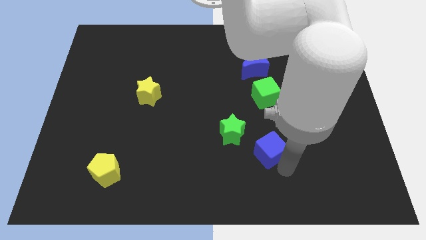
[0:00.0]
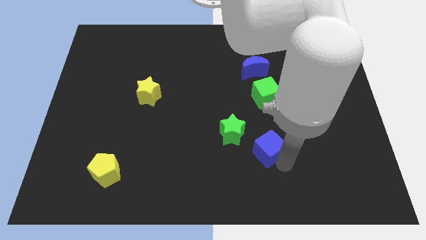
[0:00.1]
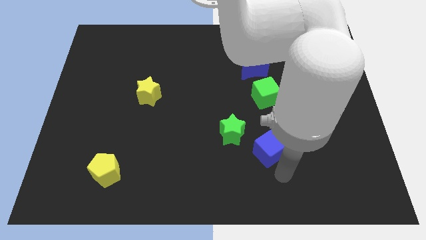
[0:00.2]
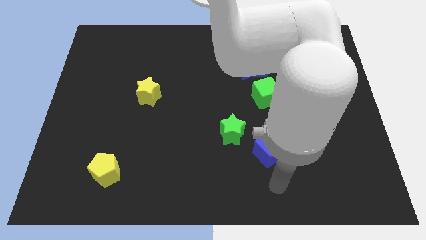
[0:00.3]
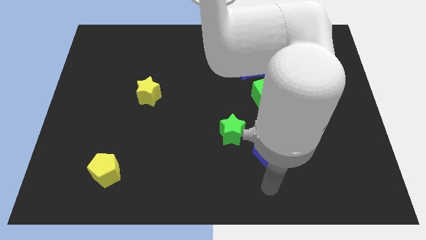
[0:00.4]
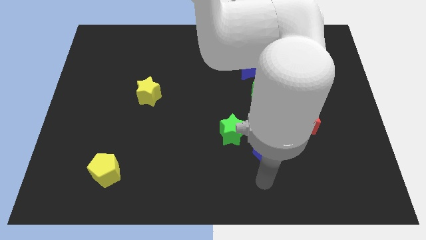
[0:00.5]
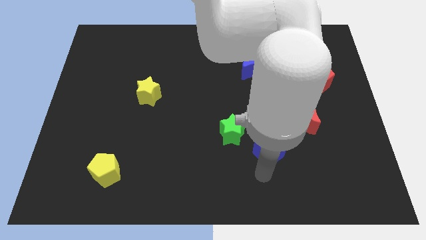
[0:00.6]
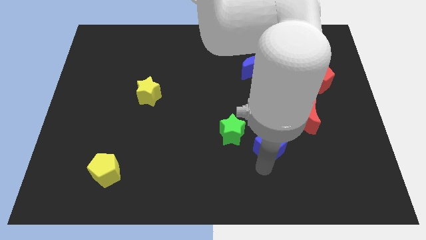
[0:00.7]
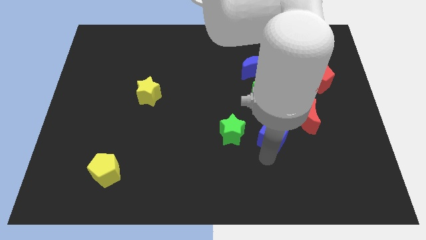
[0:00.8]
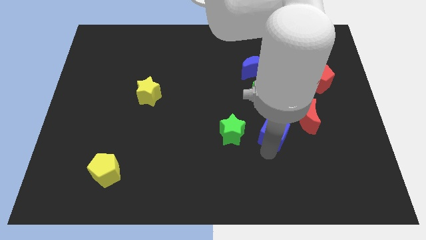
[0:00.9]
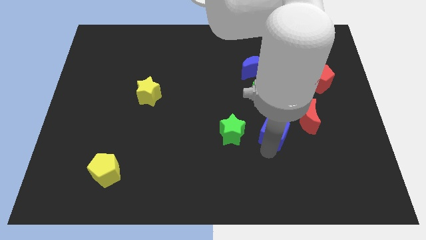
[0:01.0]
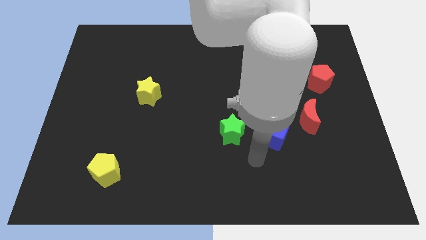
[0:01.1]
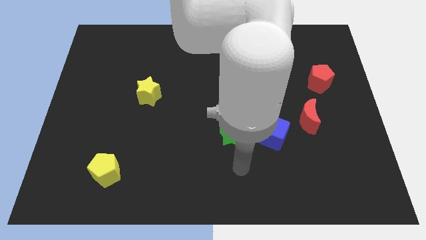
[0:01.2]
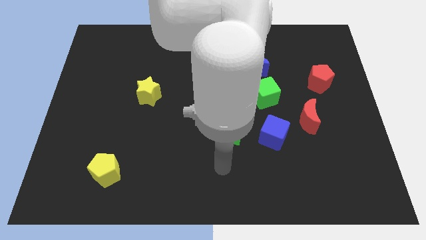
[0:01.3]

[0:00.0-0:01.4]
place the blue cube to the right side of the green star

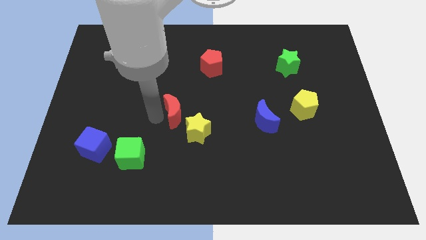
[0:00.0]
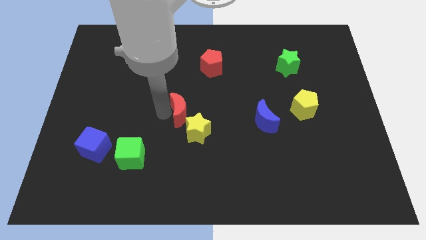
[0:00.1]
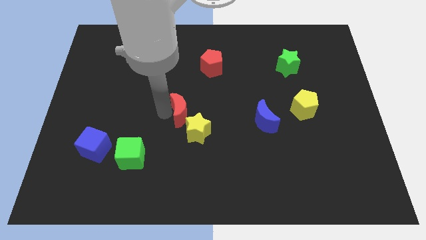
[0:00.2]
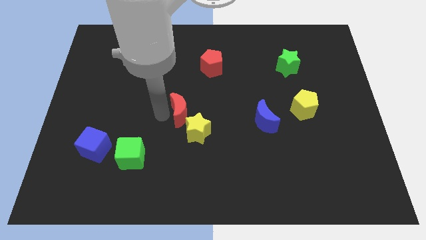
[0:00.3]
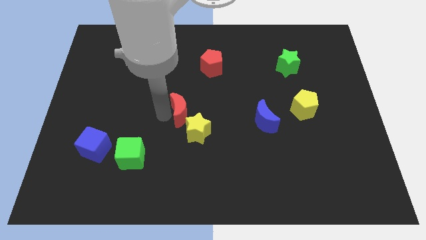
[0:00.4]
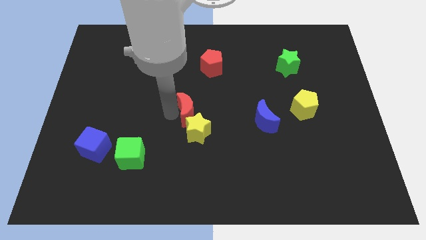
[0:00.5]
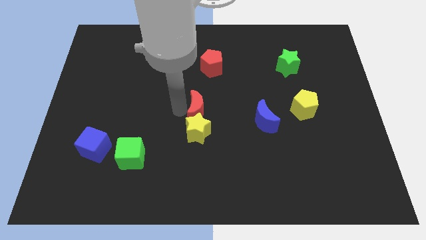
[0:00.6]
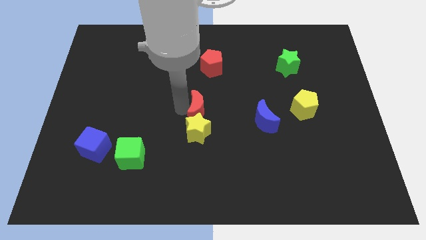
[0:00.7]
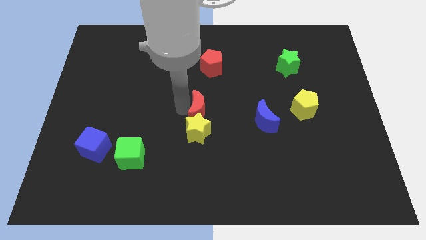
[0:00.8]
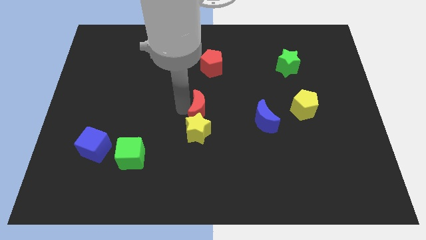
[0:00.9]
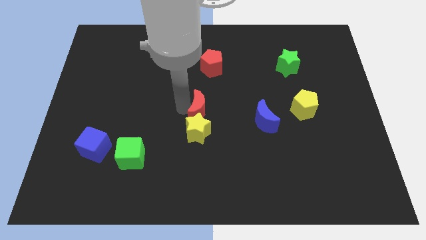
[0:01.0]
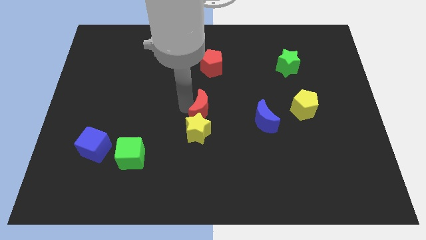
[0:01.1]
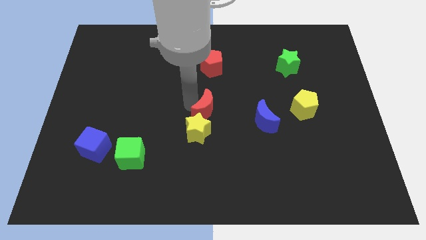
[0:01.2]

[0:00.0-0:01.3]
put the red crescent at the top of the yellow star

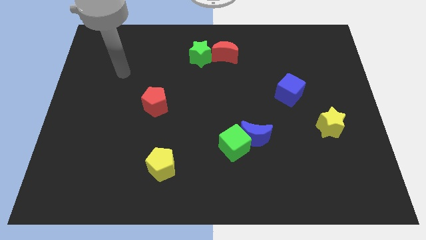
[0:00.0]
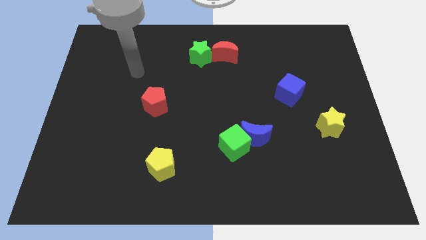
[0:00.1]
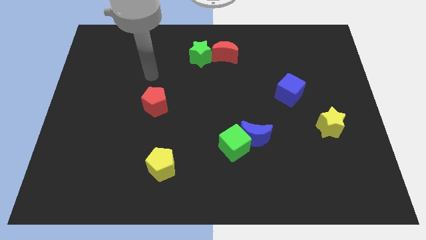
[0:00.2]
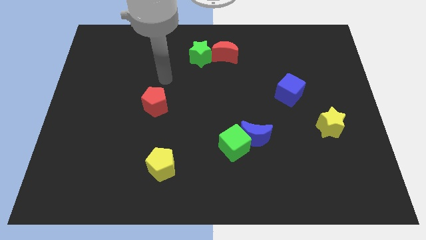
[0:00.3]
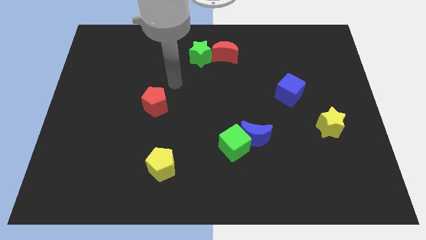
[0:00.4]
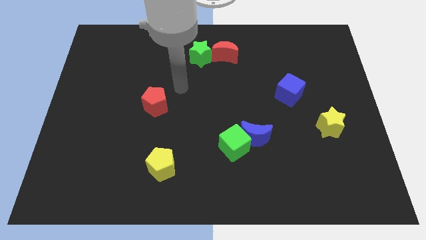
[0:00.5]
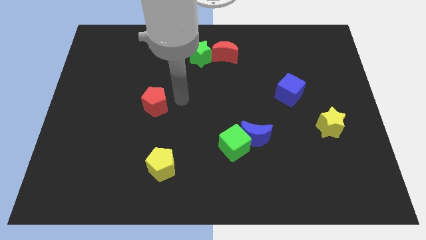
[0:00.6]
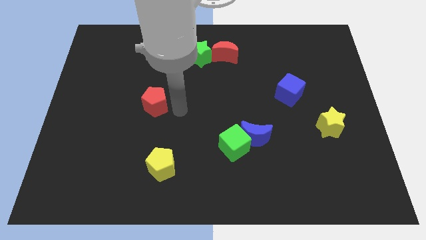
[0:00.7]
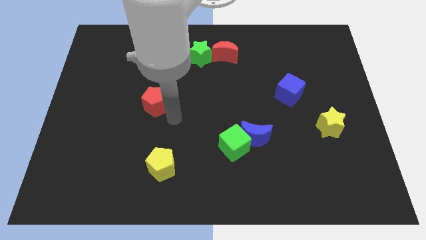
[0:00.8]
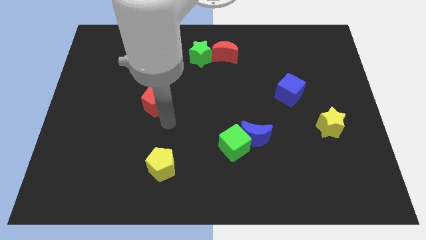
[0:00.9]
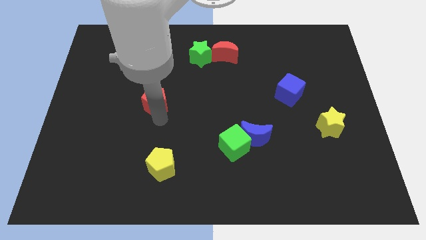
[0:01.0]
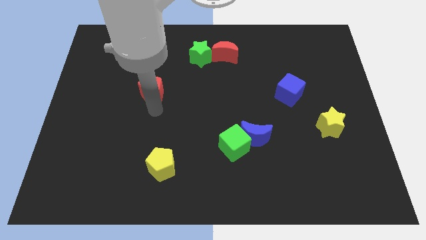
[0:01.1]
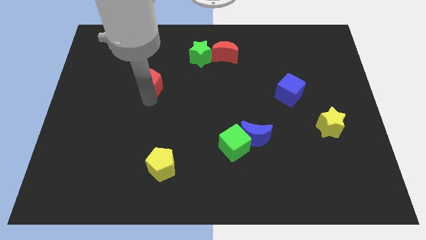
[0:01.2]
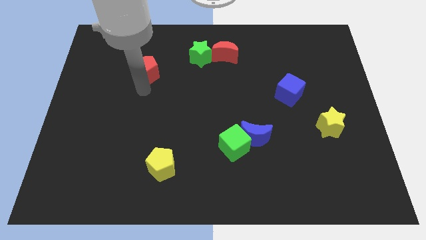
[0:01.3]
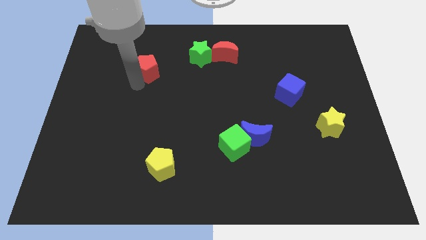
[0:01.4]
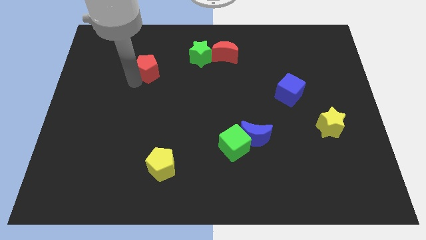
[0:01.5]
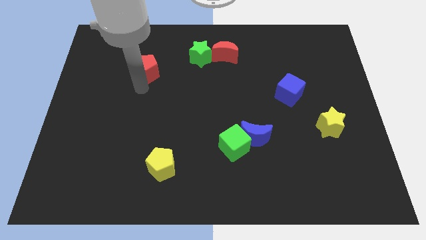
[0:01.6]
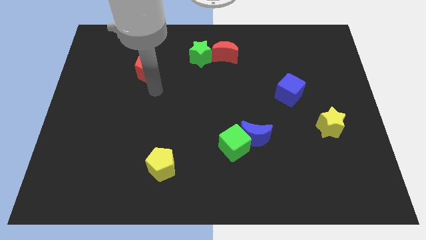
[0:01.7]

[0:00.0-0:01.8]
push the red pentagon diagonal to the green star

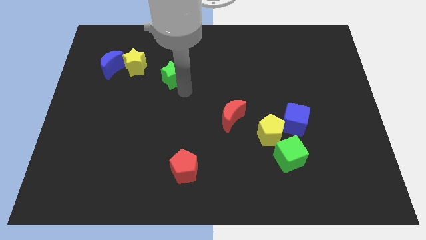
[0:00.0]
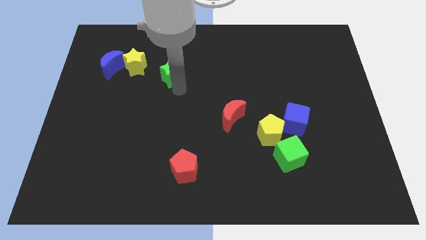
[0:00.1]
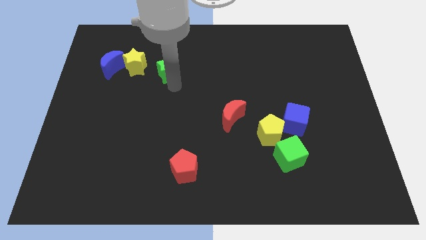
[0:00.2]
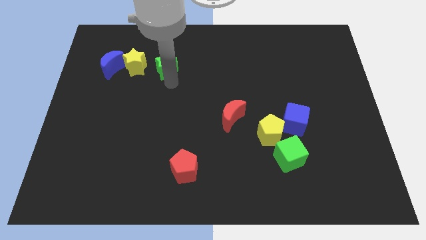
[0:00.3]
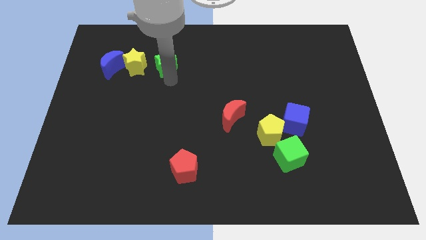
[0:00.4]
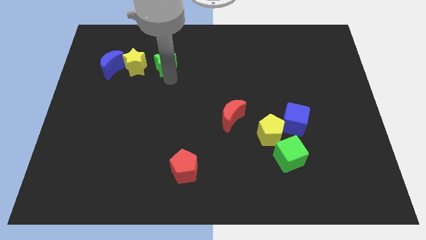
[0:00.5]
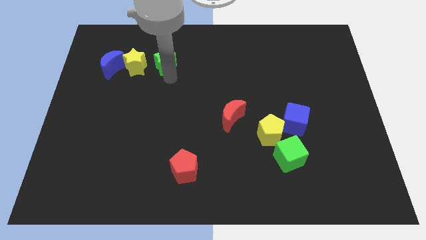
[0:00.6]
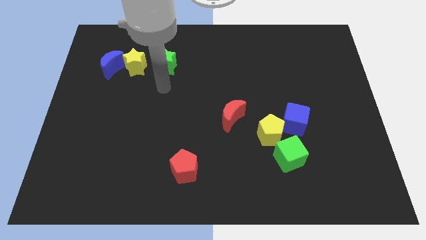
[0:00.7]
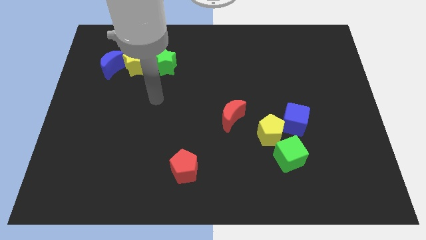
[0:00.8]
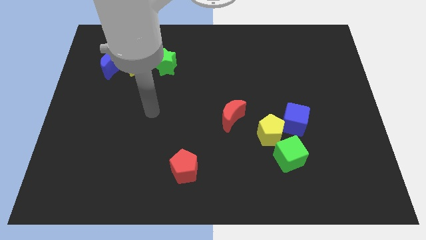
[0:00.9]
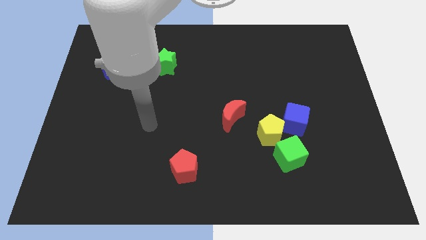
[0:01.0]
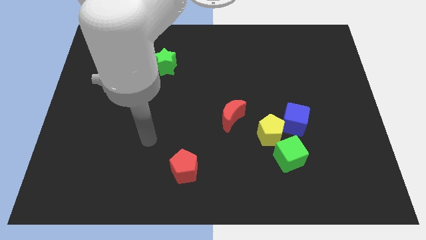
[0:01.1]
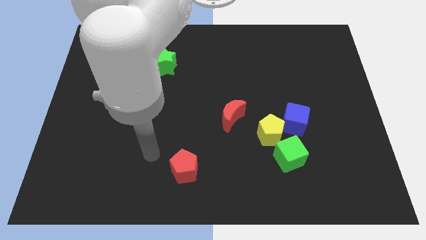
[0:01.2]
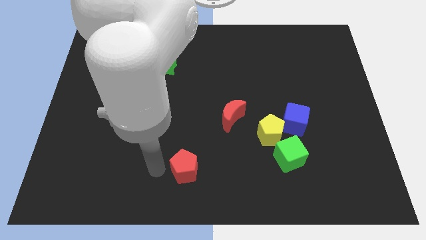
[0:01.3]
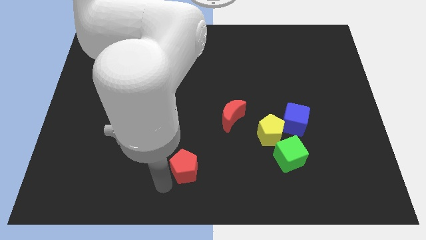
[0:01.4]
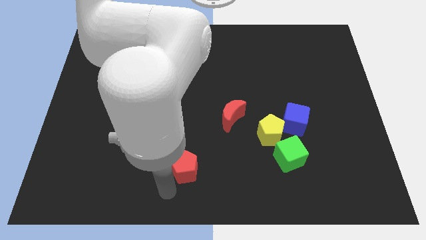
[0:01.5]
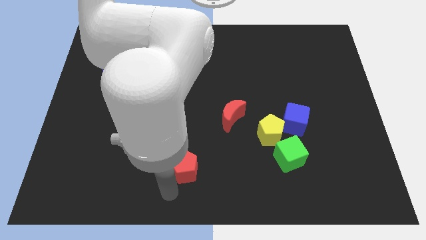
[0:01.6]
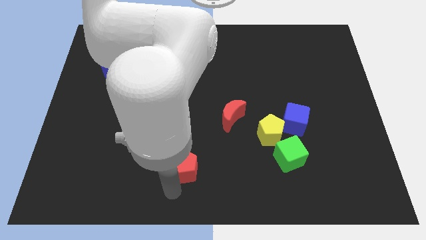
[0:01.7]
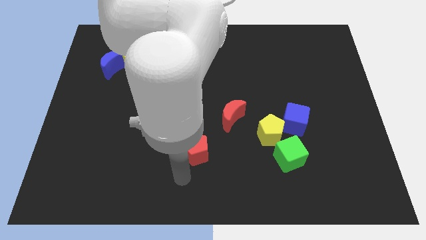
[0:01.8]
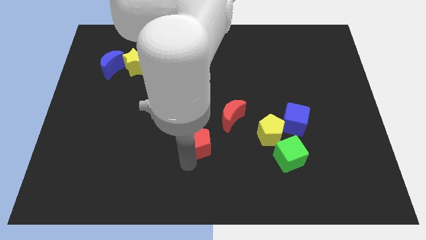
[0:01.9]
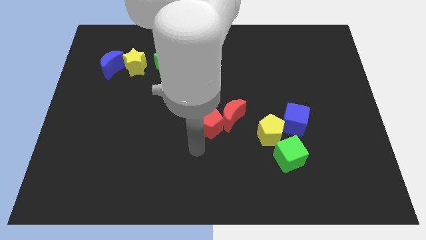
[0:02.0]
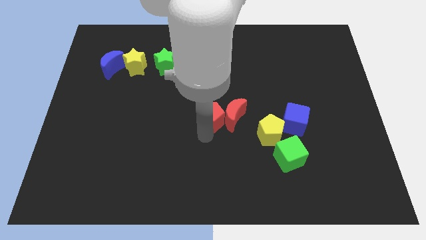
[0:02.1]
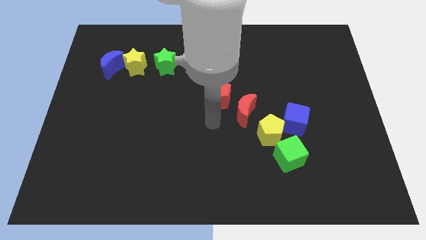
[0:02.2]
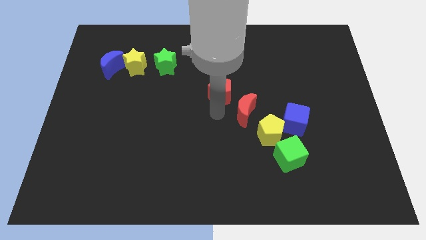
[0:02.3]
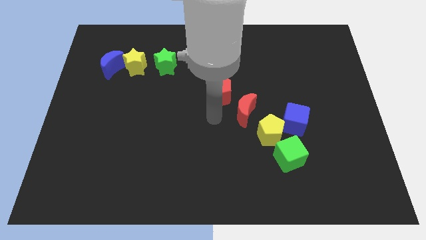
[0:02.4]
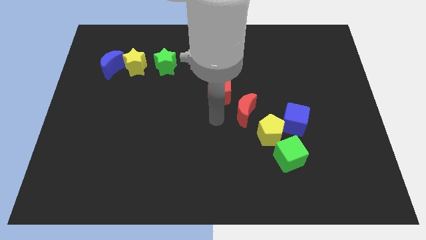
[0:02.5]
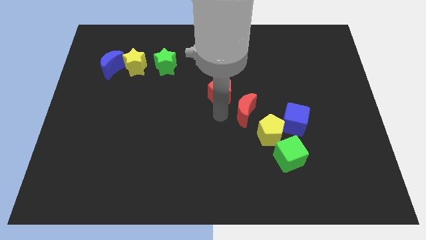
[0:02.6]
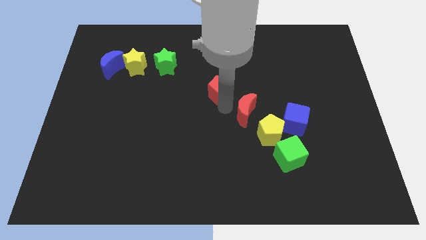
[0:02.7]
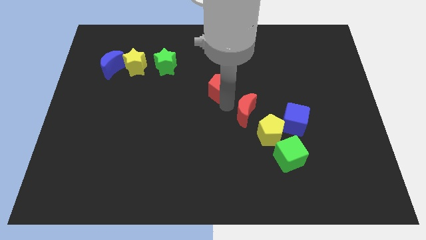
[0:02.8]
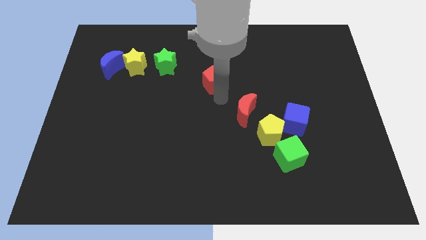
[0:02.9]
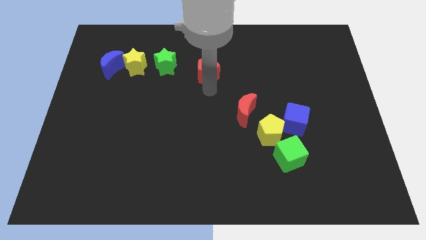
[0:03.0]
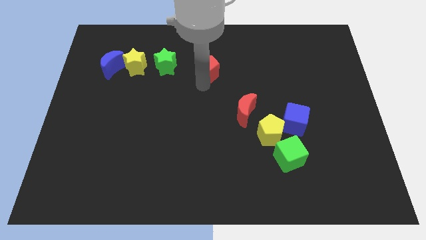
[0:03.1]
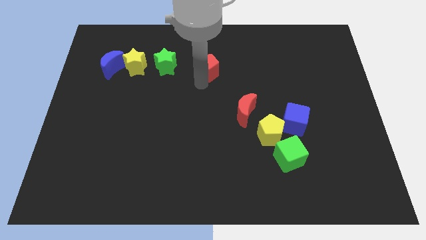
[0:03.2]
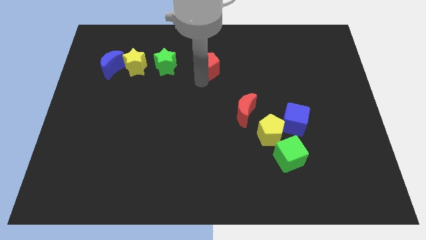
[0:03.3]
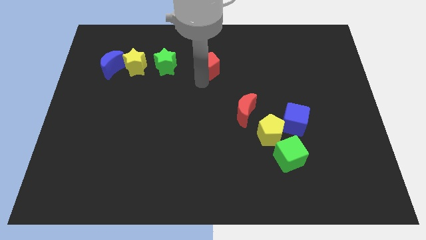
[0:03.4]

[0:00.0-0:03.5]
move red pentagon to the right of green star

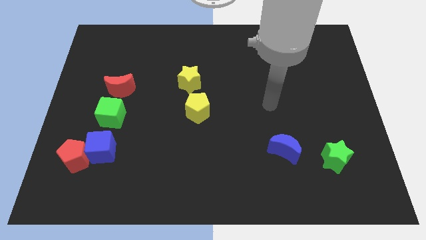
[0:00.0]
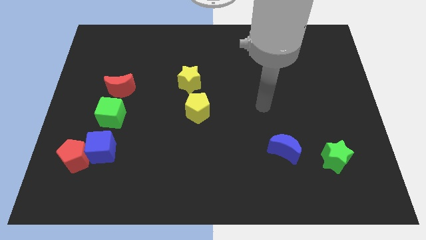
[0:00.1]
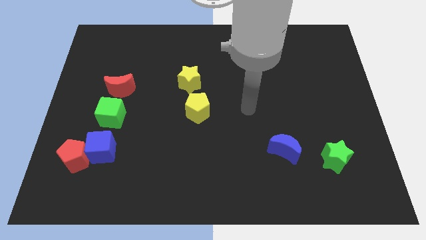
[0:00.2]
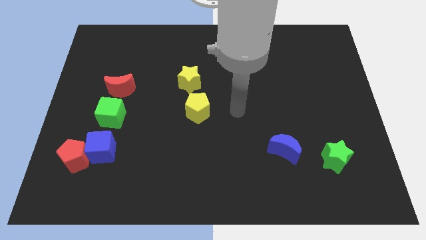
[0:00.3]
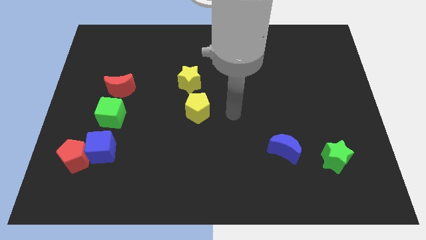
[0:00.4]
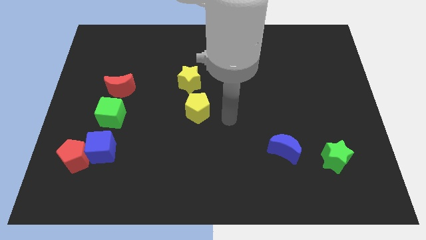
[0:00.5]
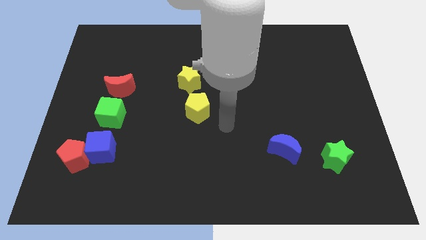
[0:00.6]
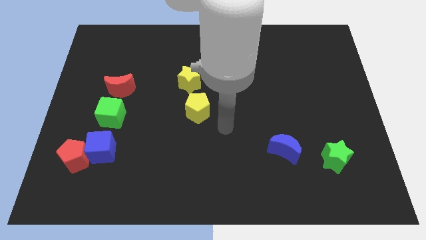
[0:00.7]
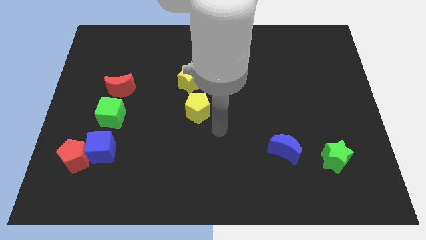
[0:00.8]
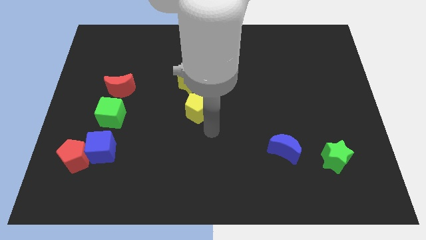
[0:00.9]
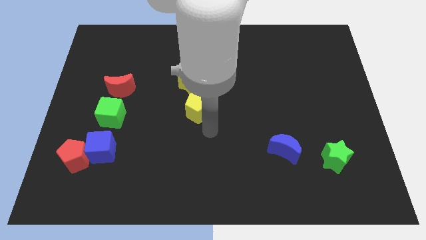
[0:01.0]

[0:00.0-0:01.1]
slide your arm below the yellow pentagon
